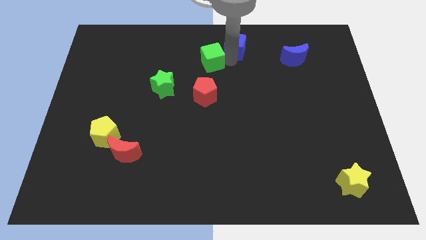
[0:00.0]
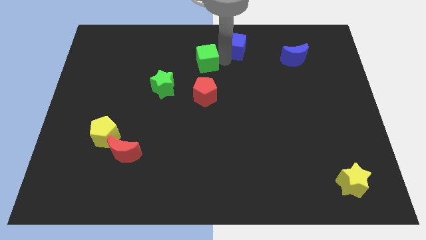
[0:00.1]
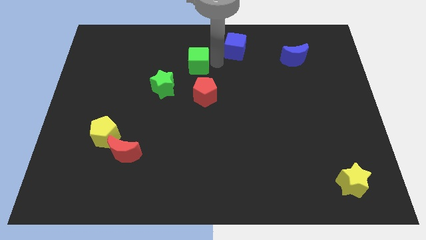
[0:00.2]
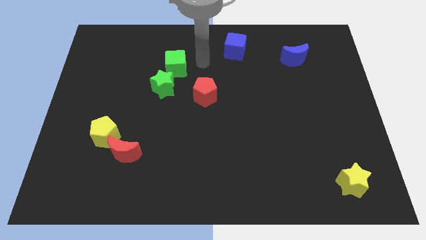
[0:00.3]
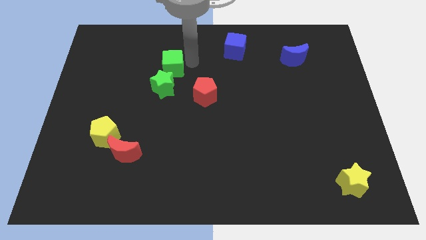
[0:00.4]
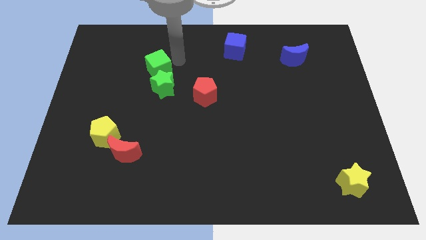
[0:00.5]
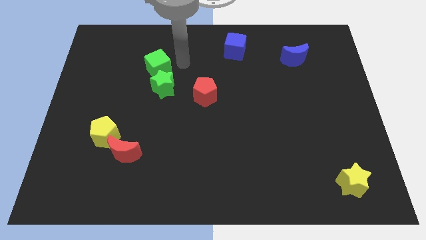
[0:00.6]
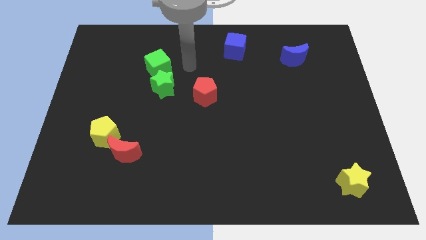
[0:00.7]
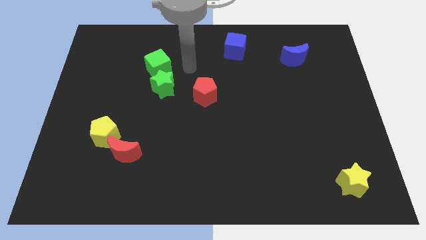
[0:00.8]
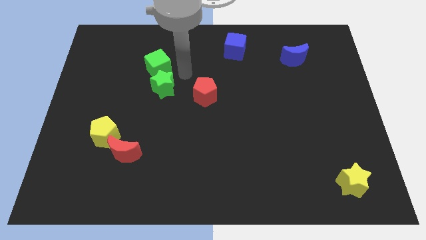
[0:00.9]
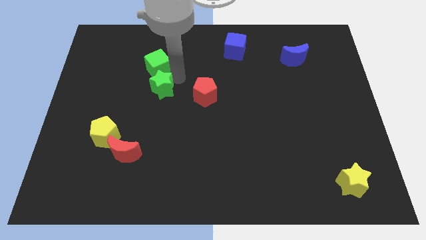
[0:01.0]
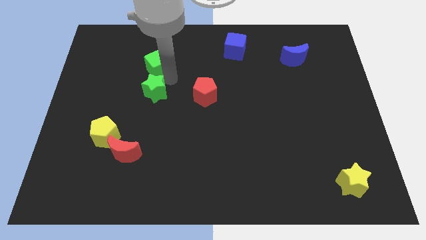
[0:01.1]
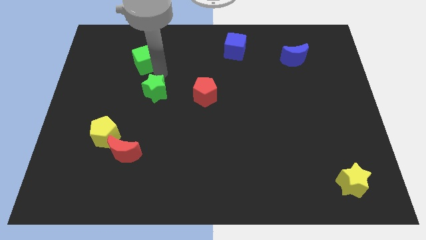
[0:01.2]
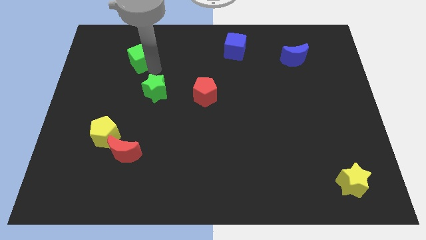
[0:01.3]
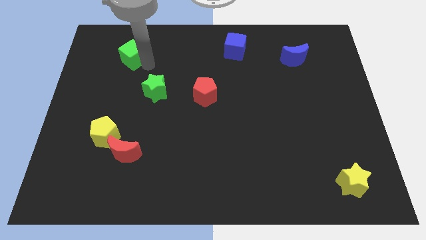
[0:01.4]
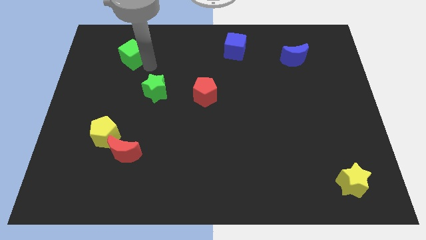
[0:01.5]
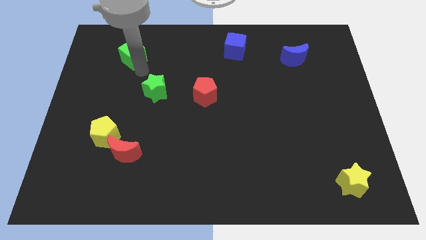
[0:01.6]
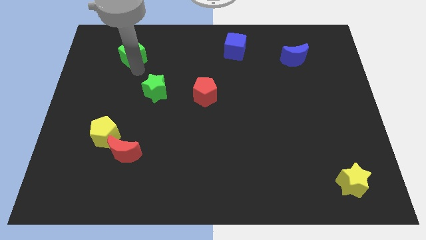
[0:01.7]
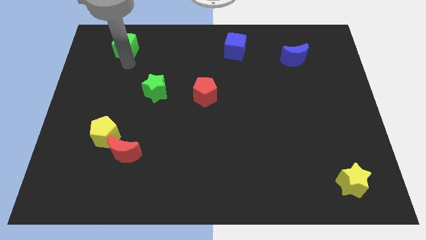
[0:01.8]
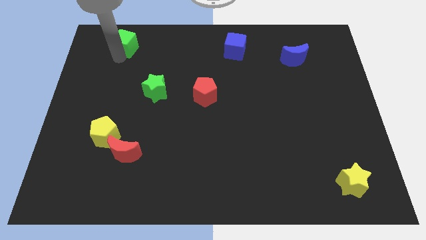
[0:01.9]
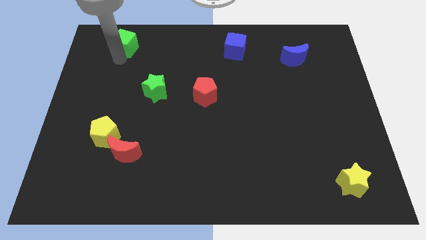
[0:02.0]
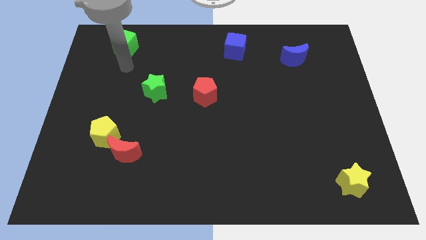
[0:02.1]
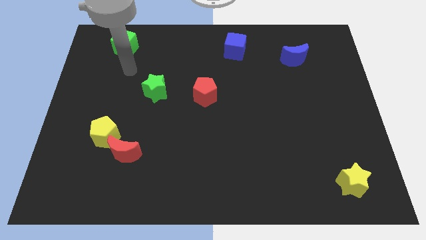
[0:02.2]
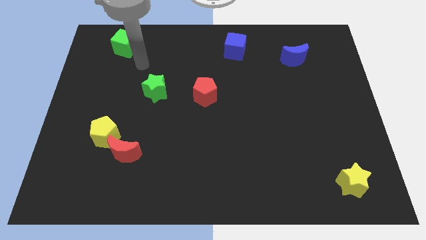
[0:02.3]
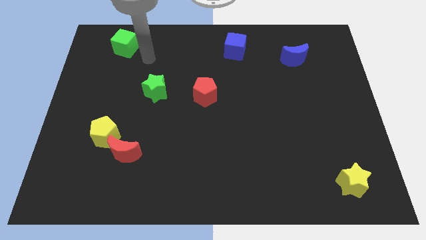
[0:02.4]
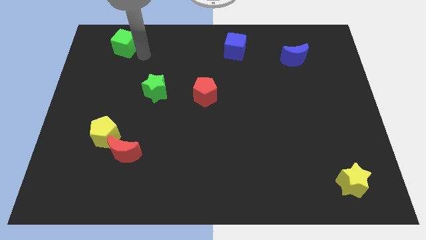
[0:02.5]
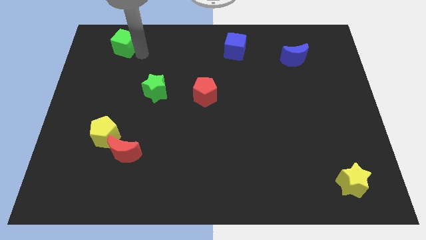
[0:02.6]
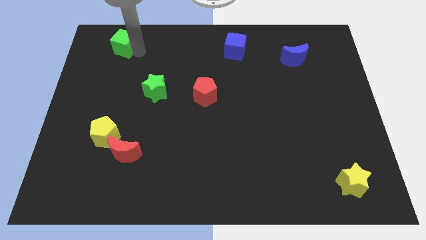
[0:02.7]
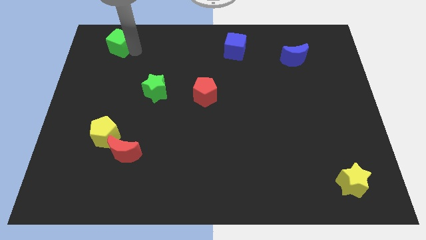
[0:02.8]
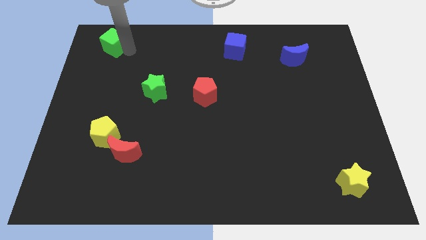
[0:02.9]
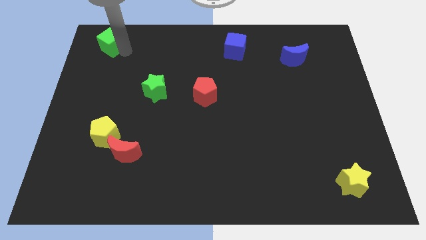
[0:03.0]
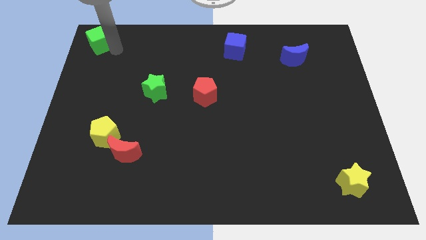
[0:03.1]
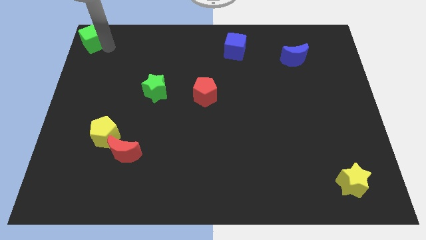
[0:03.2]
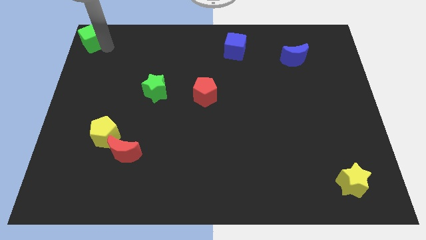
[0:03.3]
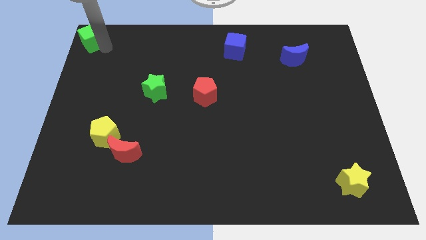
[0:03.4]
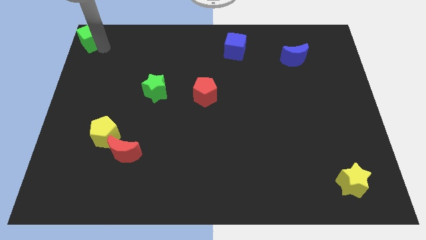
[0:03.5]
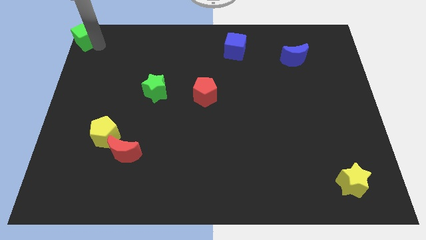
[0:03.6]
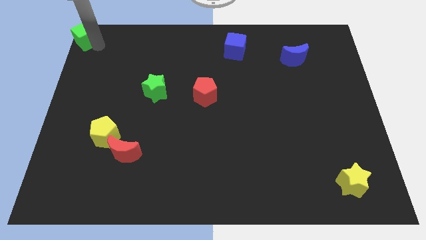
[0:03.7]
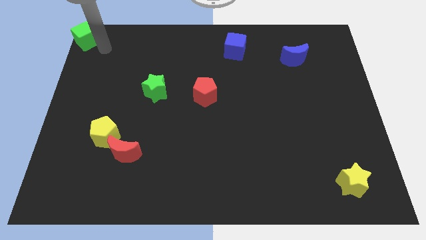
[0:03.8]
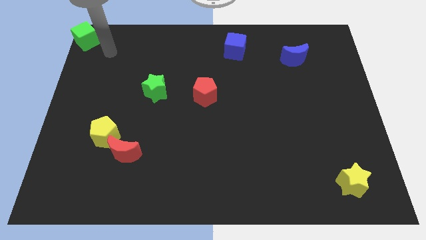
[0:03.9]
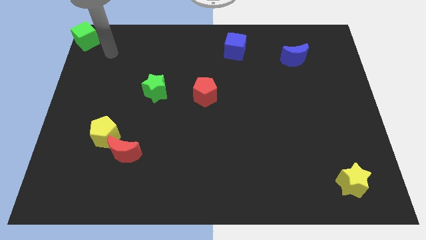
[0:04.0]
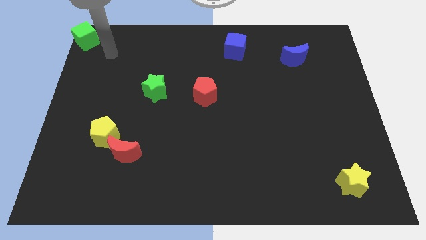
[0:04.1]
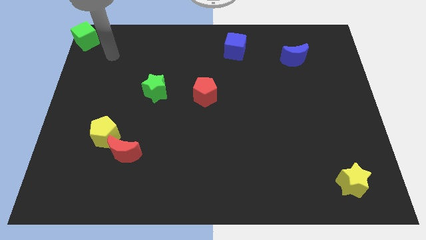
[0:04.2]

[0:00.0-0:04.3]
push the green cube to the top left corner of the board

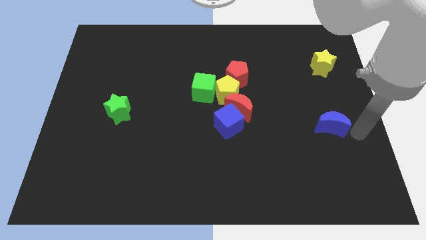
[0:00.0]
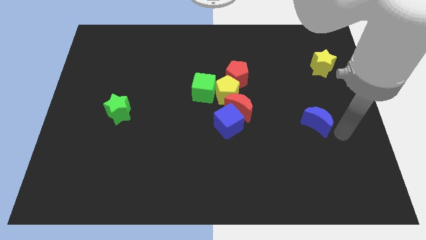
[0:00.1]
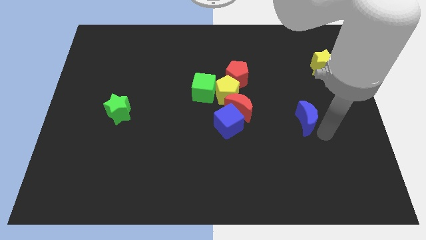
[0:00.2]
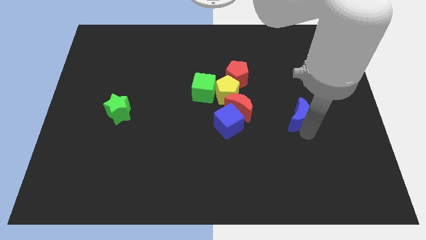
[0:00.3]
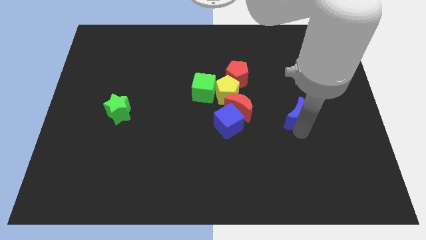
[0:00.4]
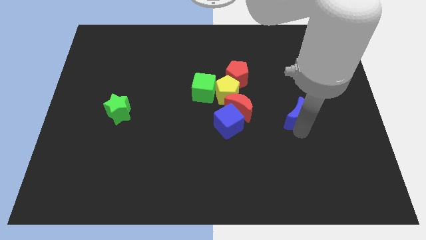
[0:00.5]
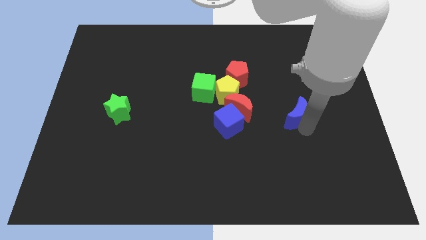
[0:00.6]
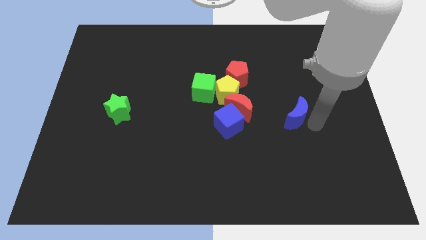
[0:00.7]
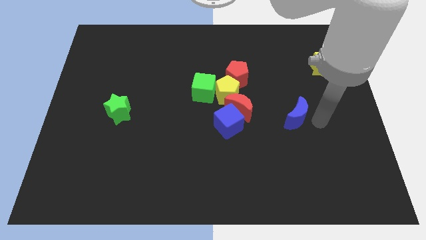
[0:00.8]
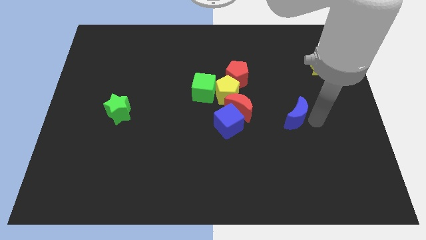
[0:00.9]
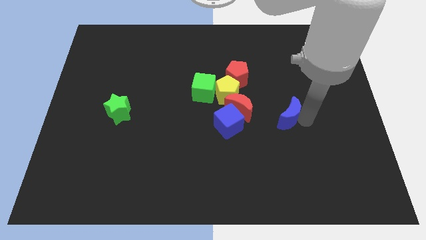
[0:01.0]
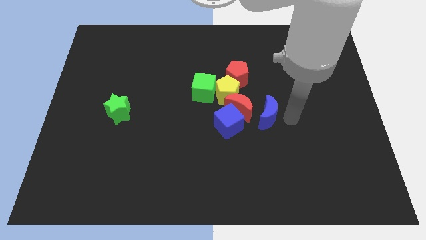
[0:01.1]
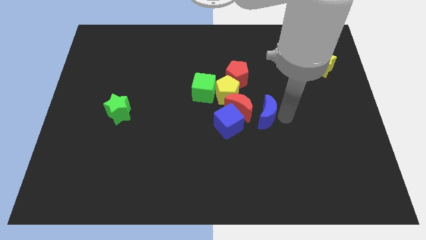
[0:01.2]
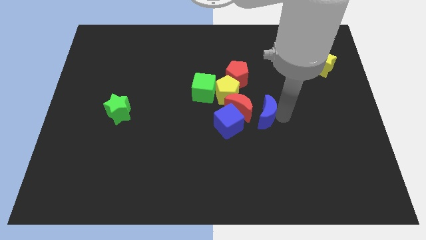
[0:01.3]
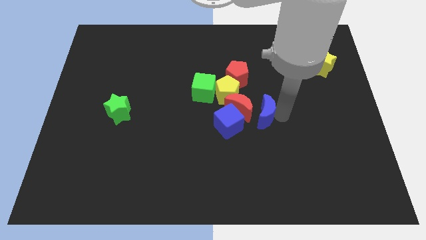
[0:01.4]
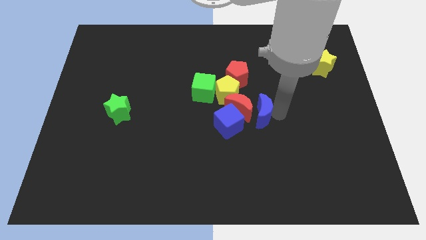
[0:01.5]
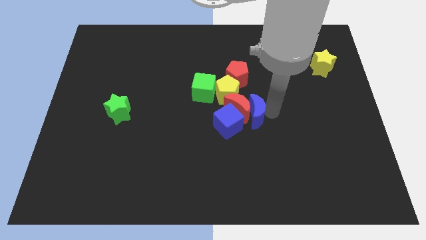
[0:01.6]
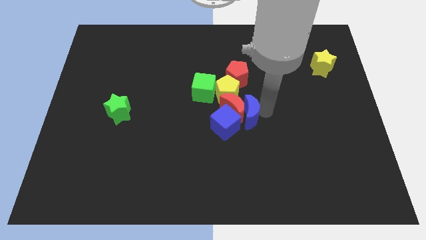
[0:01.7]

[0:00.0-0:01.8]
drag the blue moon into the right side of the red crescent

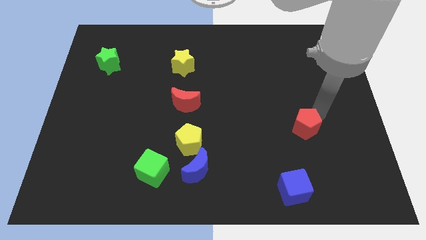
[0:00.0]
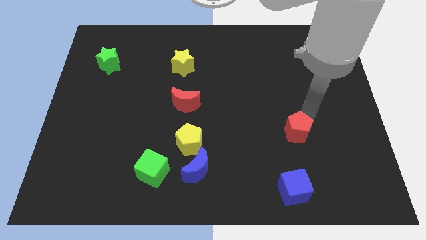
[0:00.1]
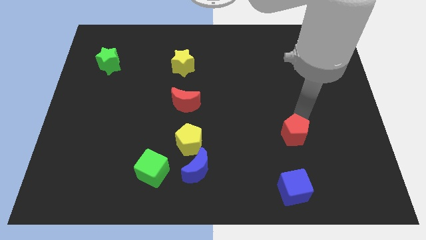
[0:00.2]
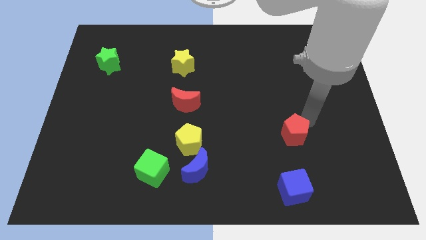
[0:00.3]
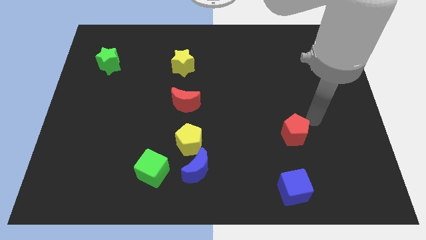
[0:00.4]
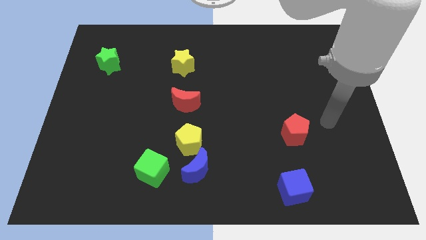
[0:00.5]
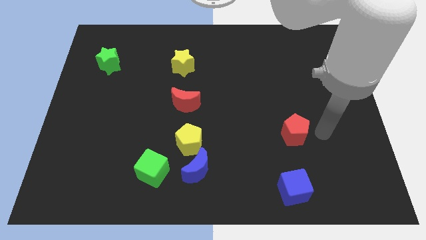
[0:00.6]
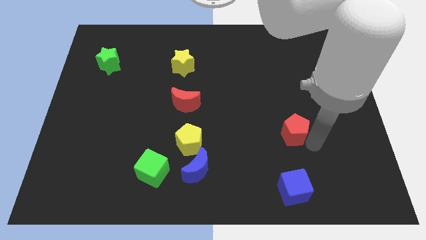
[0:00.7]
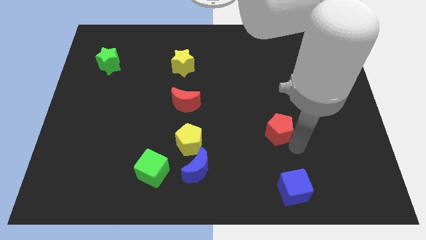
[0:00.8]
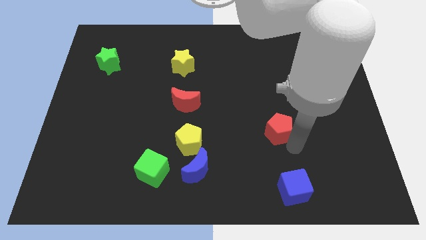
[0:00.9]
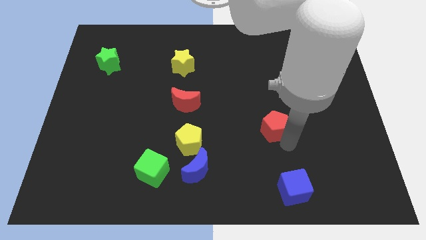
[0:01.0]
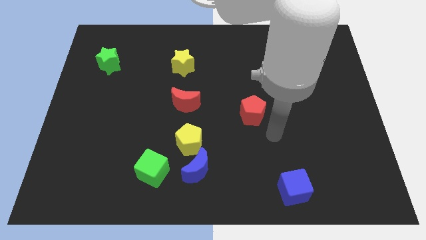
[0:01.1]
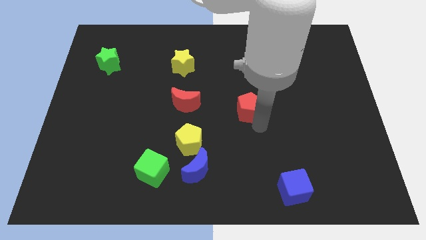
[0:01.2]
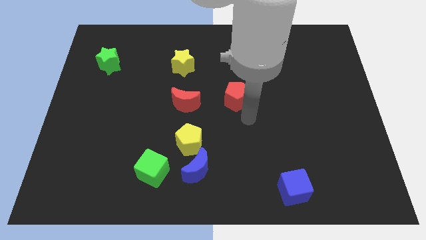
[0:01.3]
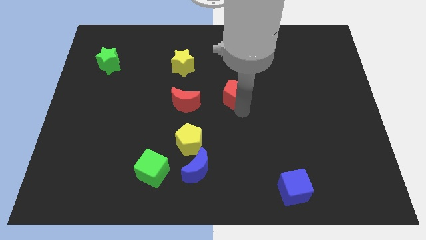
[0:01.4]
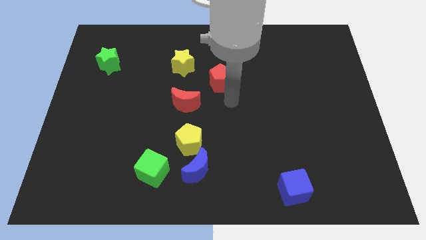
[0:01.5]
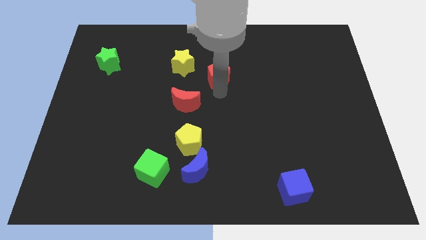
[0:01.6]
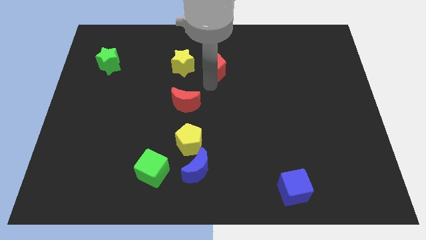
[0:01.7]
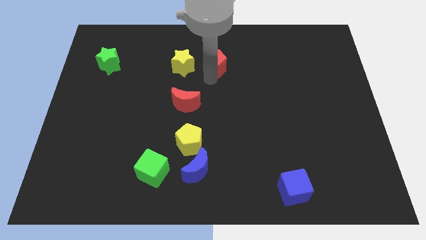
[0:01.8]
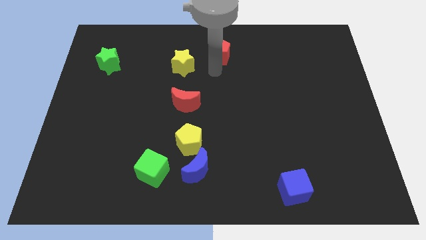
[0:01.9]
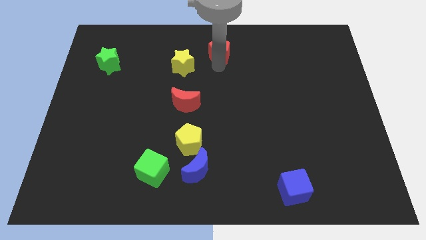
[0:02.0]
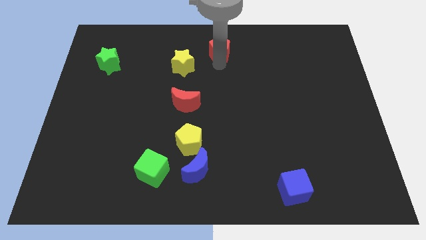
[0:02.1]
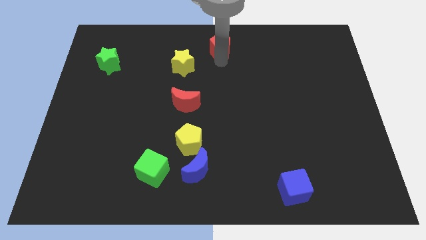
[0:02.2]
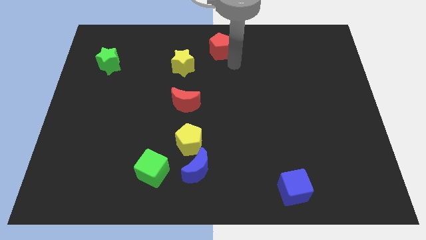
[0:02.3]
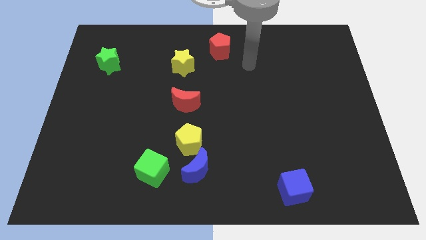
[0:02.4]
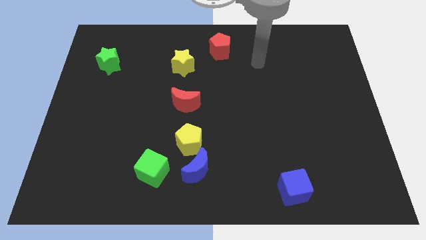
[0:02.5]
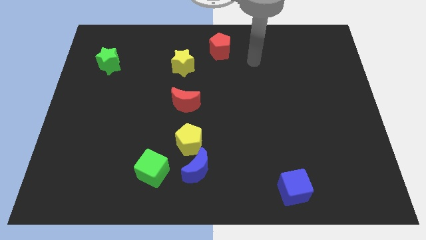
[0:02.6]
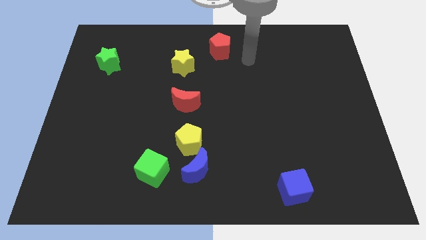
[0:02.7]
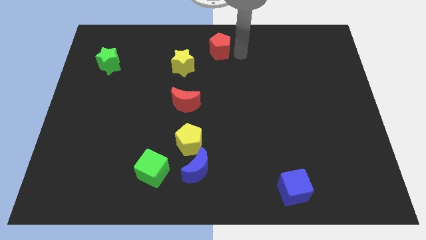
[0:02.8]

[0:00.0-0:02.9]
move red pentagon towards center top

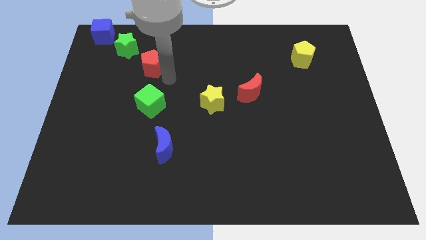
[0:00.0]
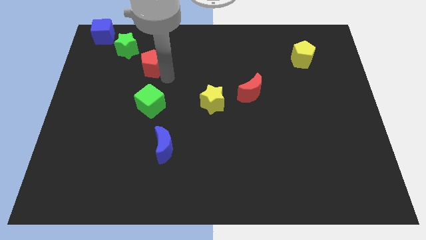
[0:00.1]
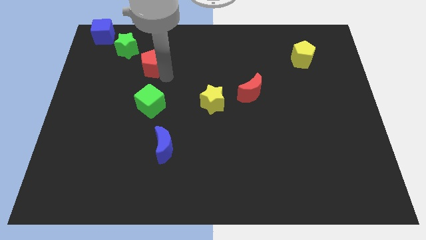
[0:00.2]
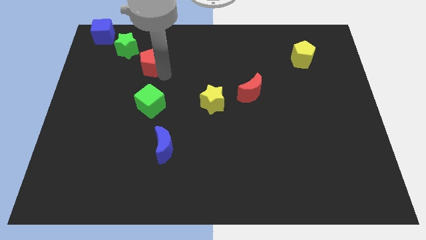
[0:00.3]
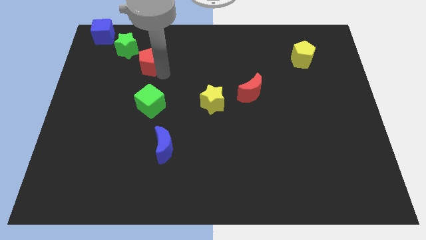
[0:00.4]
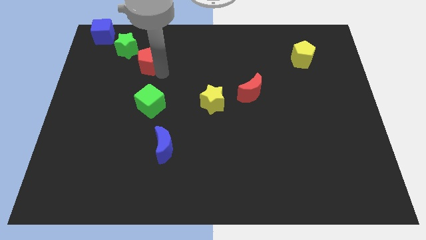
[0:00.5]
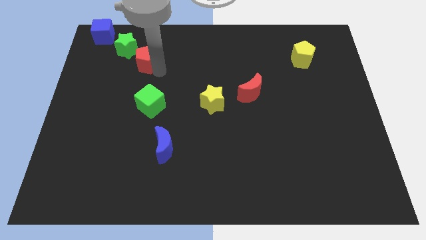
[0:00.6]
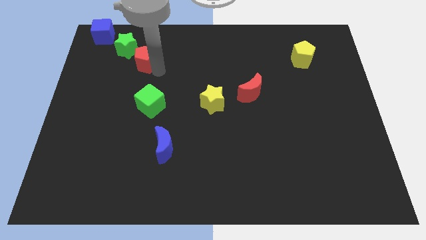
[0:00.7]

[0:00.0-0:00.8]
place red pentagon on bottom right of green star
